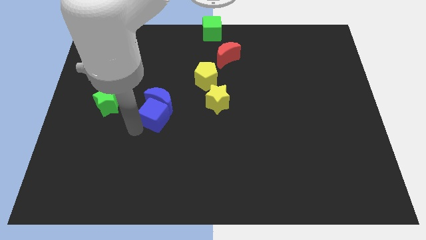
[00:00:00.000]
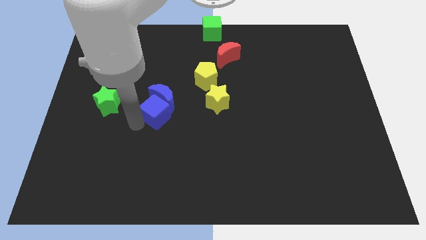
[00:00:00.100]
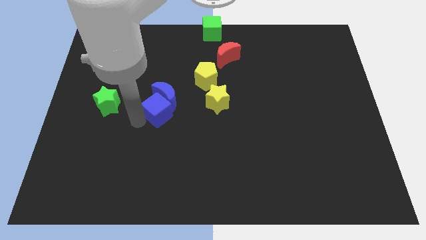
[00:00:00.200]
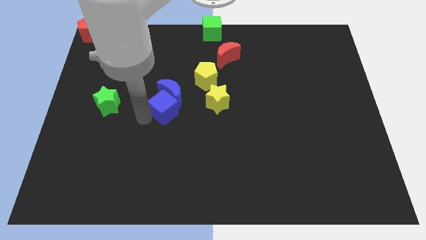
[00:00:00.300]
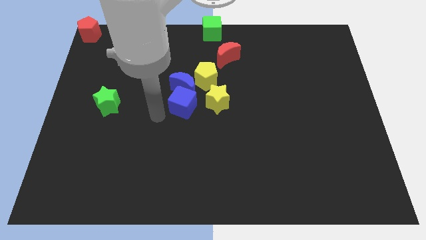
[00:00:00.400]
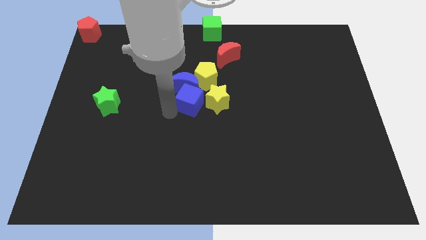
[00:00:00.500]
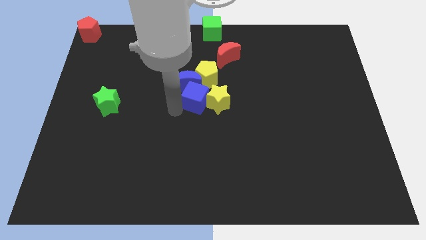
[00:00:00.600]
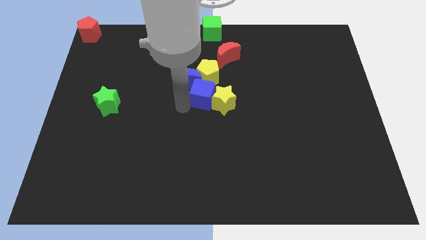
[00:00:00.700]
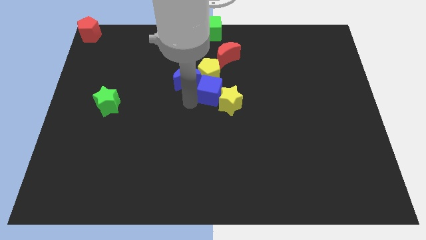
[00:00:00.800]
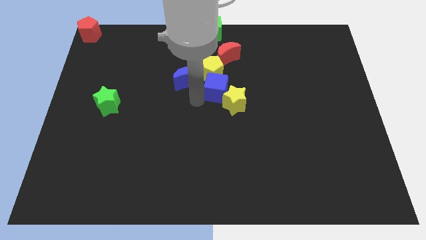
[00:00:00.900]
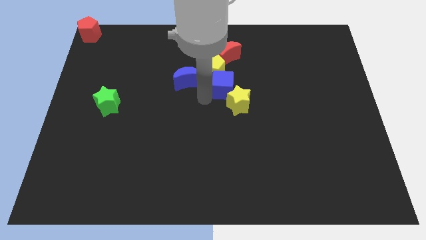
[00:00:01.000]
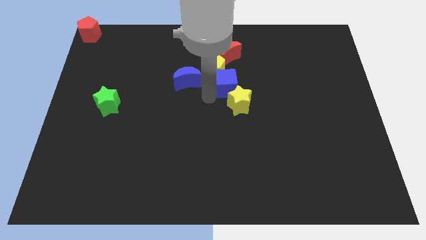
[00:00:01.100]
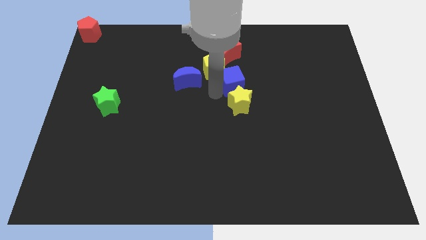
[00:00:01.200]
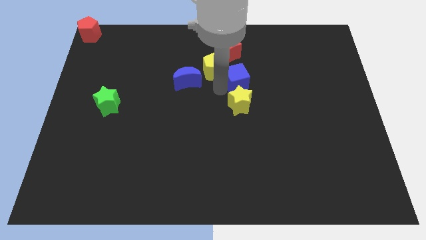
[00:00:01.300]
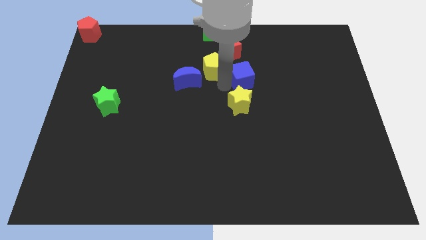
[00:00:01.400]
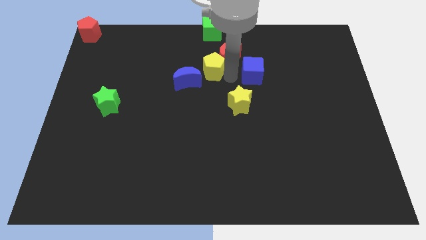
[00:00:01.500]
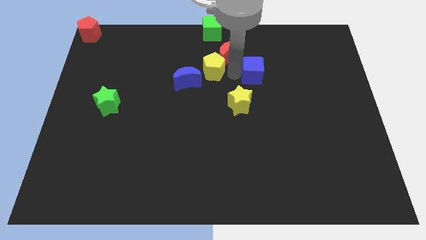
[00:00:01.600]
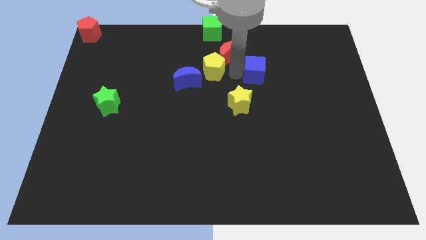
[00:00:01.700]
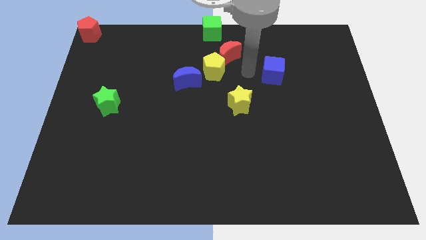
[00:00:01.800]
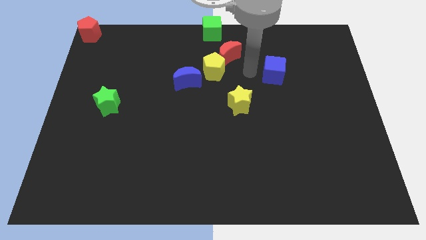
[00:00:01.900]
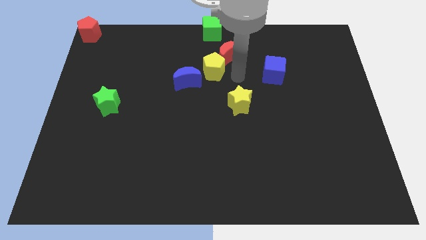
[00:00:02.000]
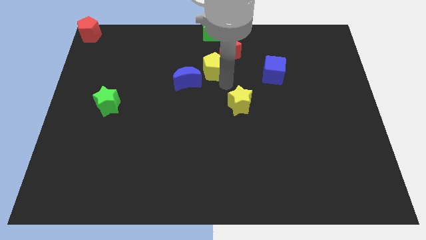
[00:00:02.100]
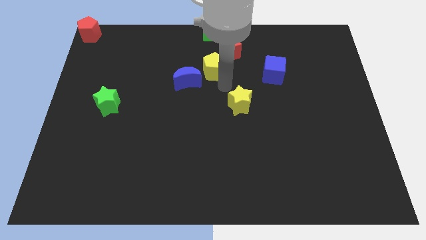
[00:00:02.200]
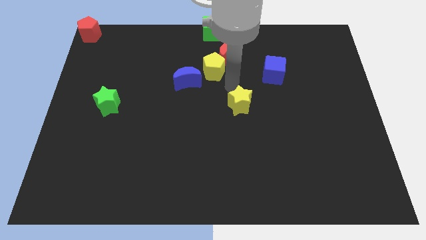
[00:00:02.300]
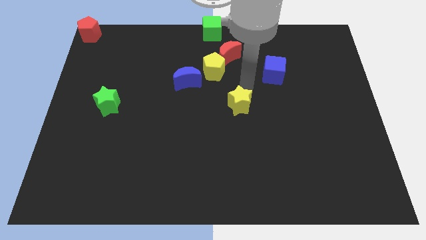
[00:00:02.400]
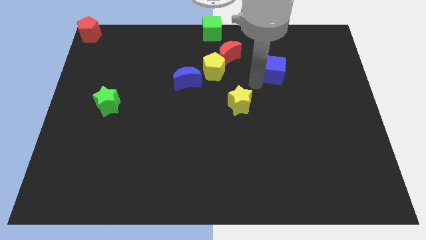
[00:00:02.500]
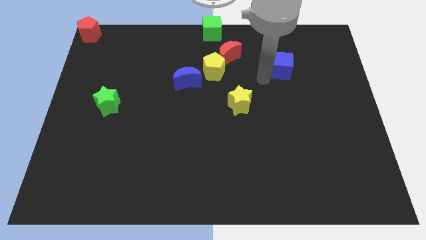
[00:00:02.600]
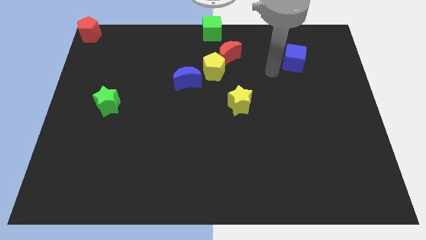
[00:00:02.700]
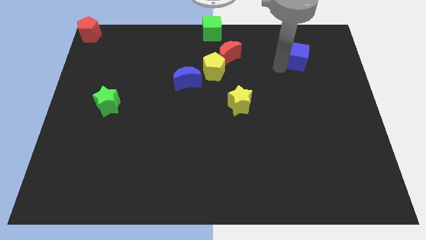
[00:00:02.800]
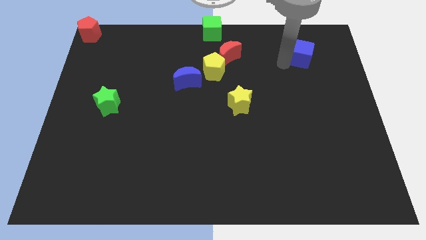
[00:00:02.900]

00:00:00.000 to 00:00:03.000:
push the blue cube to the top right of the board

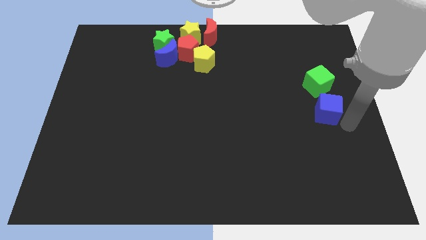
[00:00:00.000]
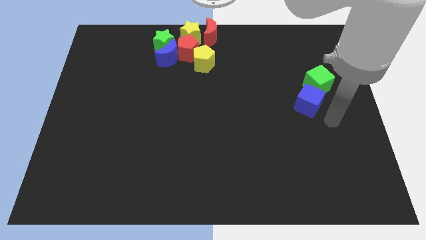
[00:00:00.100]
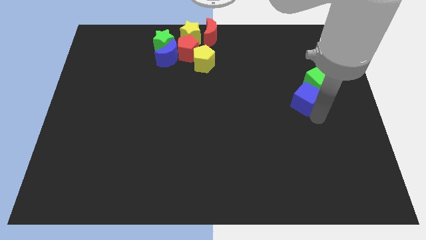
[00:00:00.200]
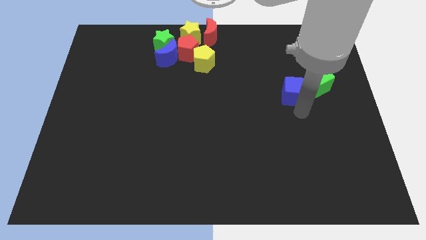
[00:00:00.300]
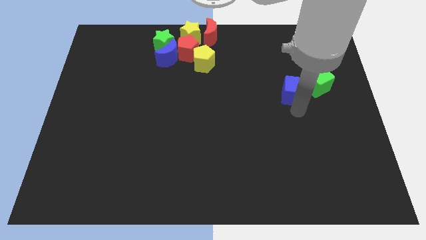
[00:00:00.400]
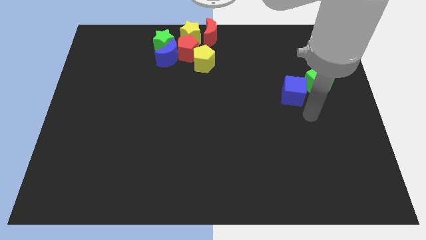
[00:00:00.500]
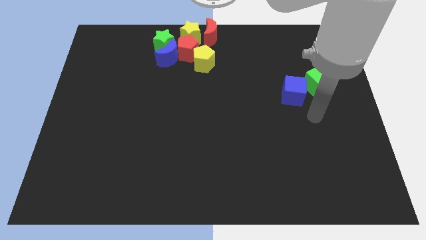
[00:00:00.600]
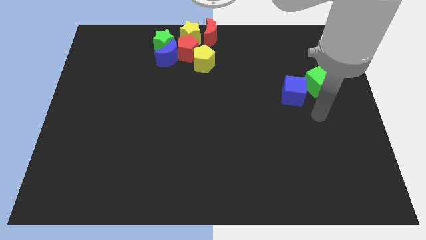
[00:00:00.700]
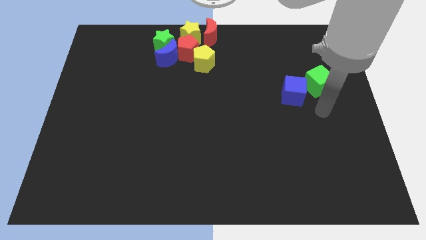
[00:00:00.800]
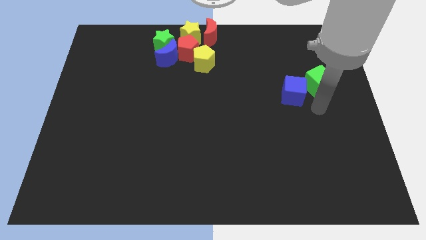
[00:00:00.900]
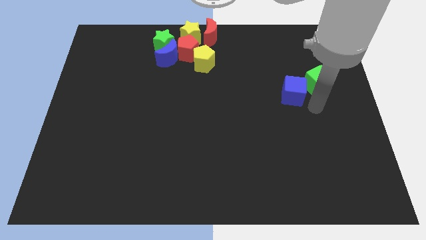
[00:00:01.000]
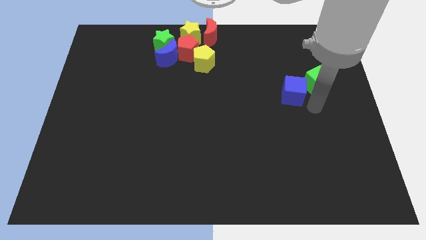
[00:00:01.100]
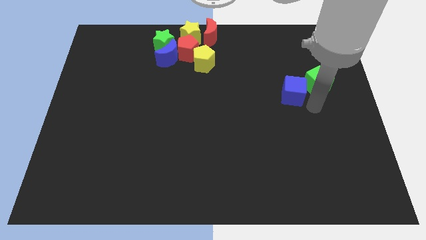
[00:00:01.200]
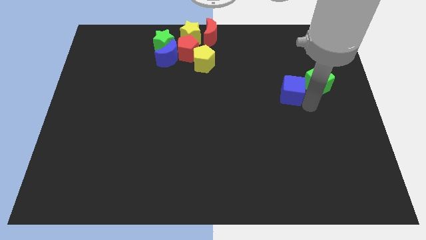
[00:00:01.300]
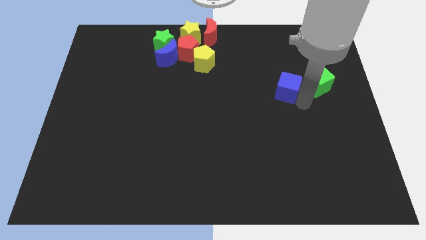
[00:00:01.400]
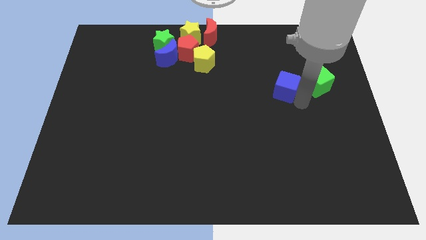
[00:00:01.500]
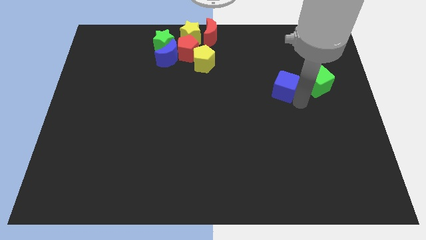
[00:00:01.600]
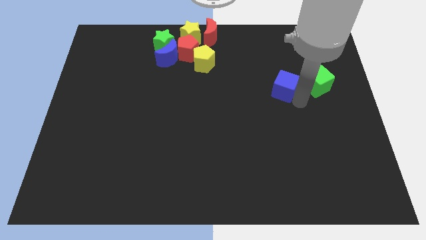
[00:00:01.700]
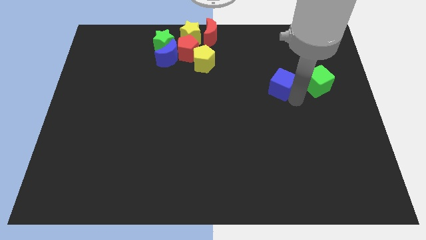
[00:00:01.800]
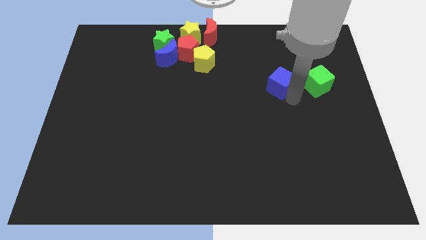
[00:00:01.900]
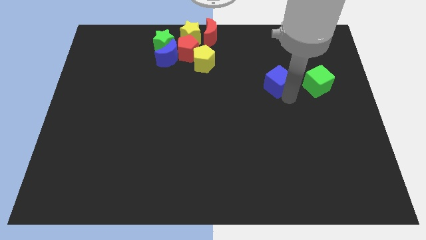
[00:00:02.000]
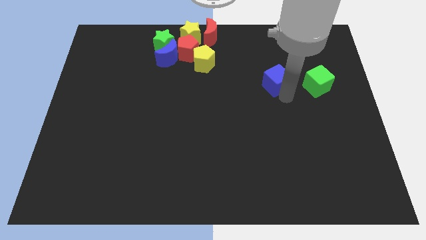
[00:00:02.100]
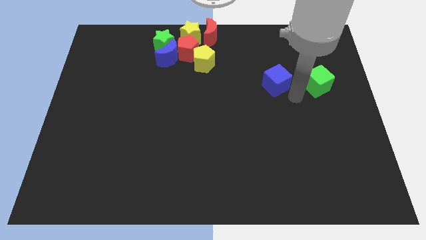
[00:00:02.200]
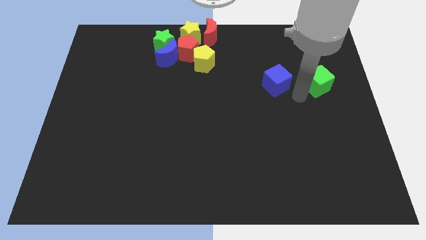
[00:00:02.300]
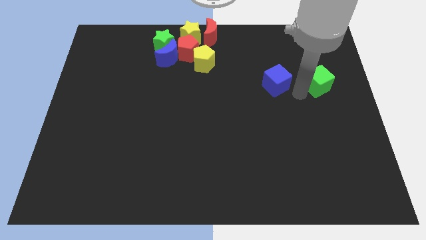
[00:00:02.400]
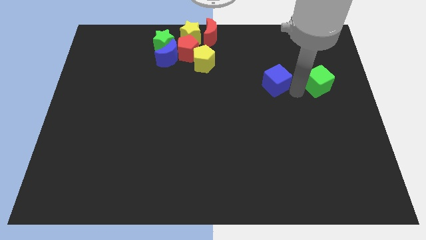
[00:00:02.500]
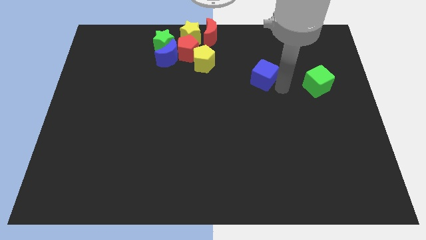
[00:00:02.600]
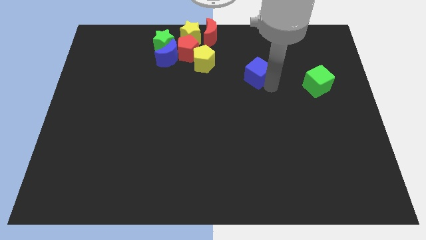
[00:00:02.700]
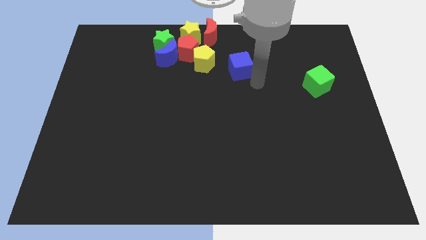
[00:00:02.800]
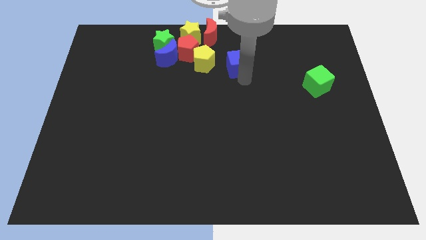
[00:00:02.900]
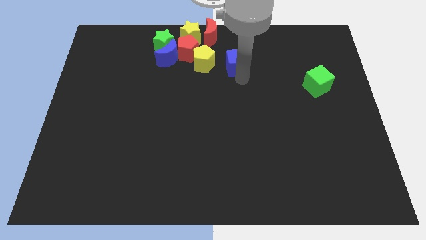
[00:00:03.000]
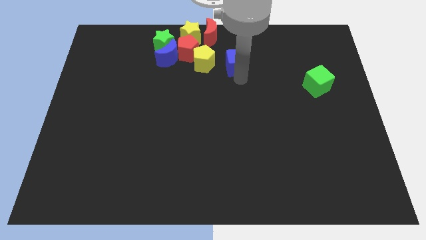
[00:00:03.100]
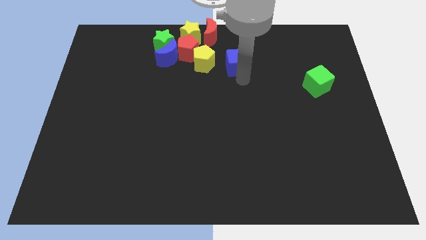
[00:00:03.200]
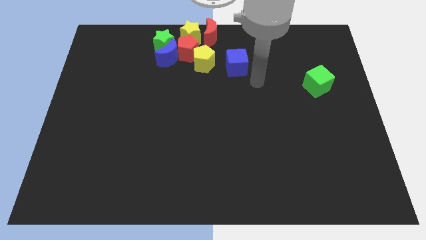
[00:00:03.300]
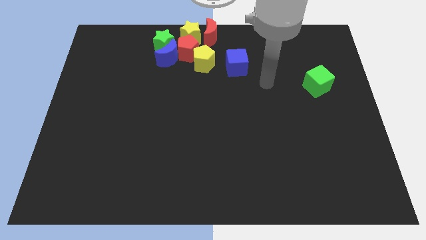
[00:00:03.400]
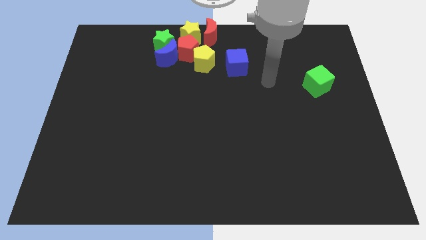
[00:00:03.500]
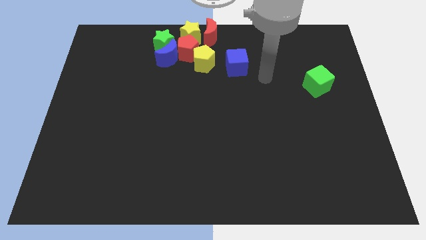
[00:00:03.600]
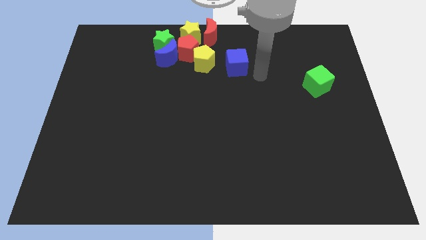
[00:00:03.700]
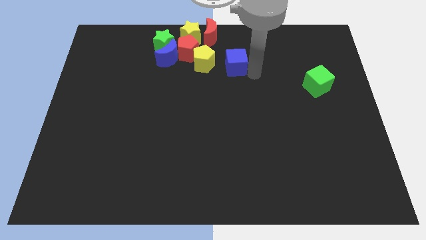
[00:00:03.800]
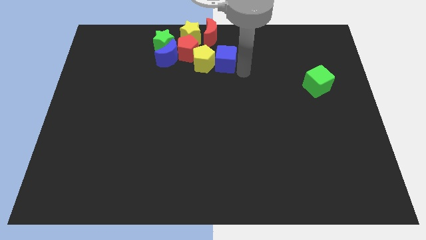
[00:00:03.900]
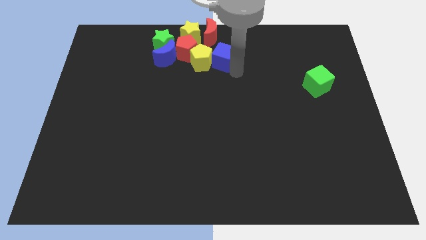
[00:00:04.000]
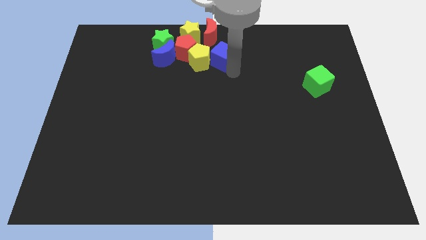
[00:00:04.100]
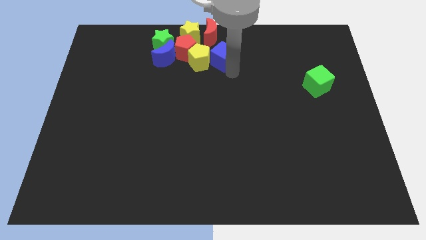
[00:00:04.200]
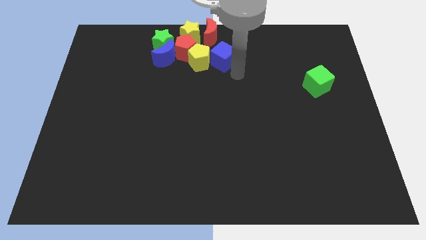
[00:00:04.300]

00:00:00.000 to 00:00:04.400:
push the blue cube into the right of the yellow pentagon

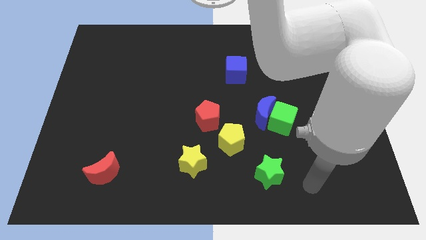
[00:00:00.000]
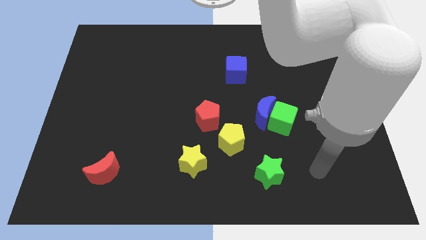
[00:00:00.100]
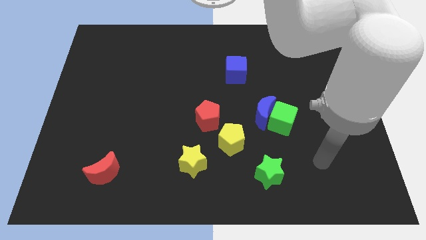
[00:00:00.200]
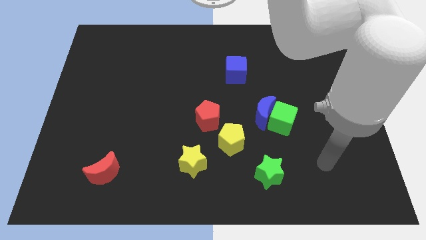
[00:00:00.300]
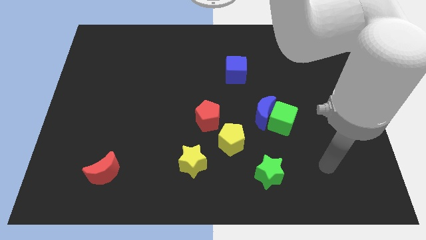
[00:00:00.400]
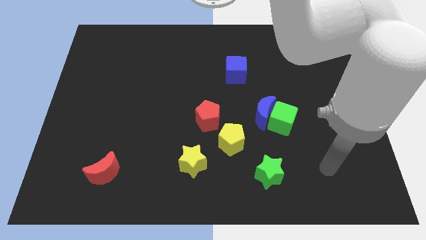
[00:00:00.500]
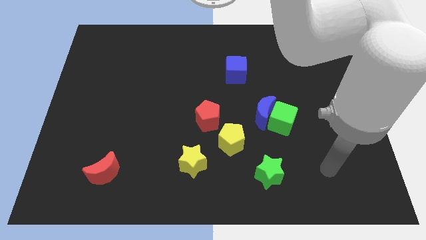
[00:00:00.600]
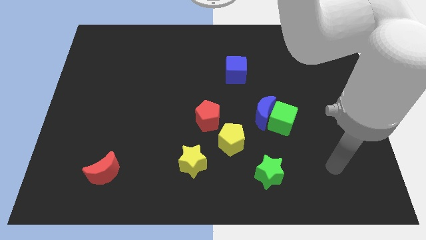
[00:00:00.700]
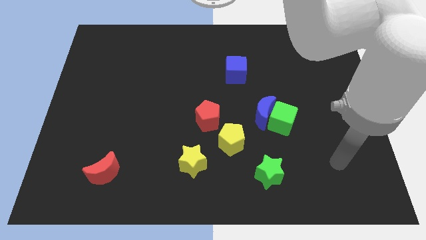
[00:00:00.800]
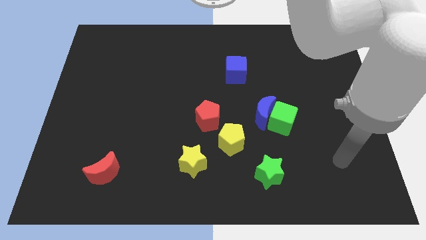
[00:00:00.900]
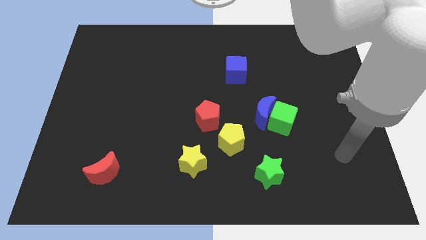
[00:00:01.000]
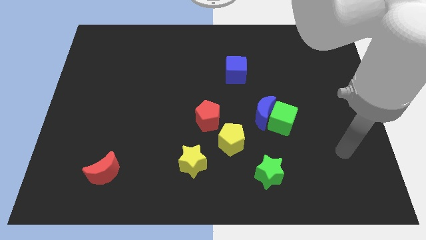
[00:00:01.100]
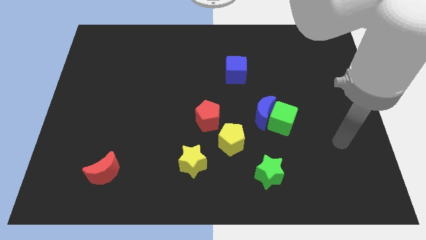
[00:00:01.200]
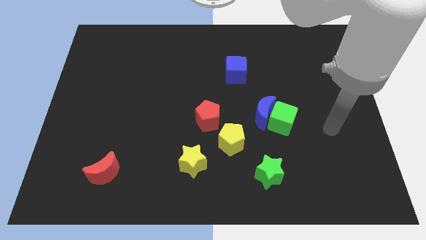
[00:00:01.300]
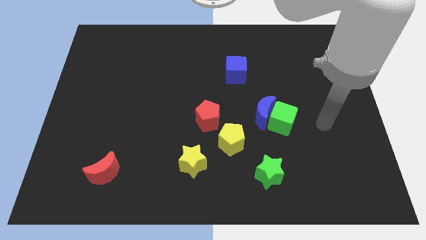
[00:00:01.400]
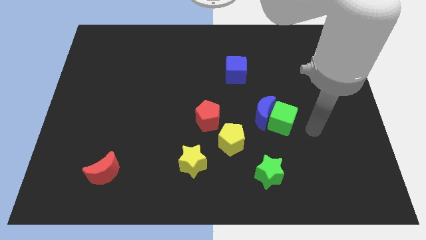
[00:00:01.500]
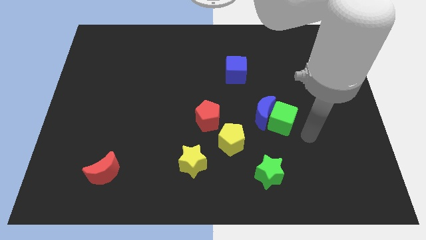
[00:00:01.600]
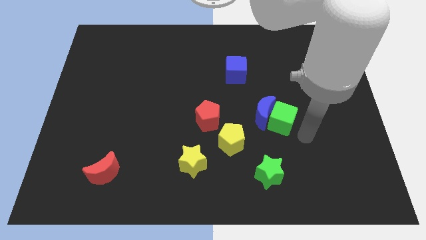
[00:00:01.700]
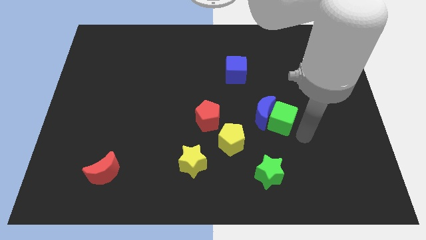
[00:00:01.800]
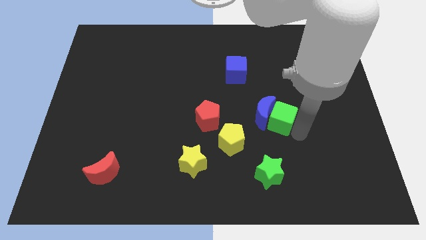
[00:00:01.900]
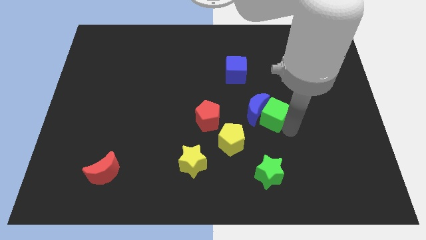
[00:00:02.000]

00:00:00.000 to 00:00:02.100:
move the green cube into the blue moon
